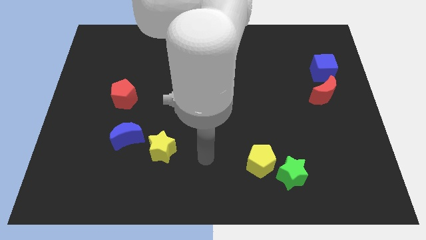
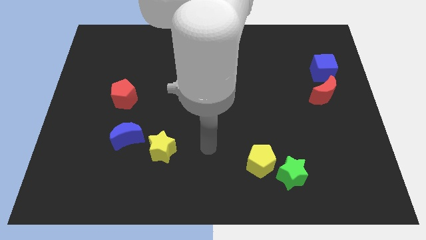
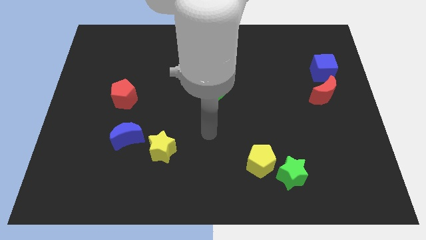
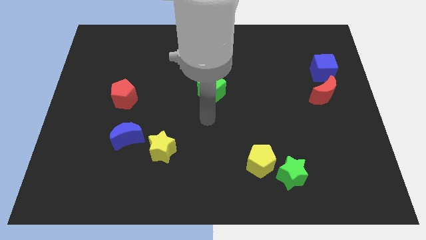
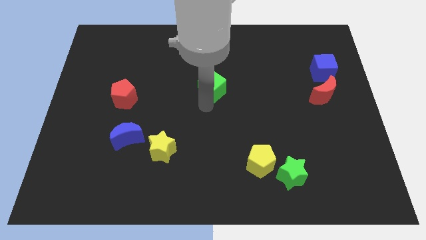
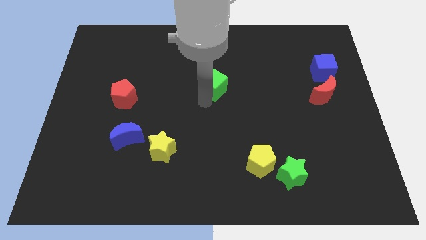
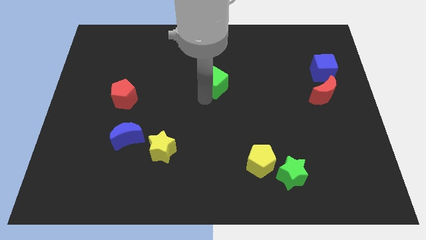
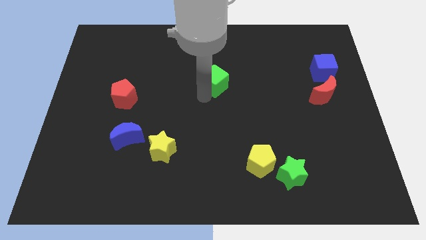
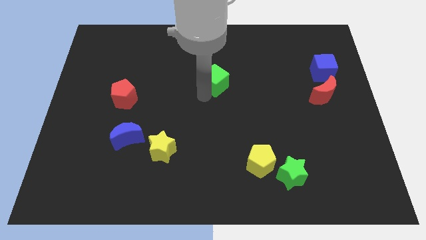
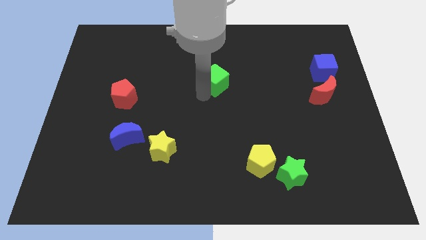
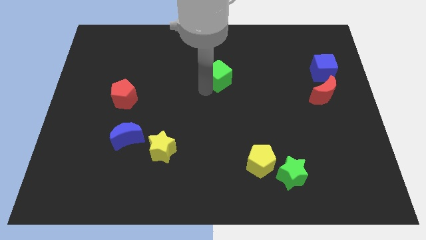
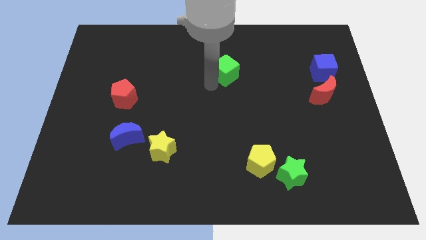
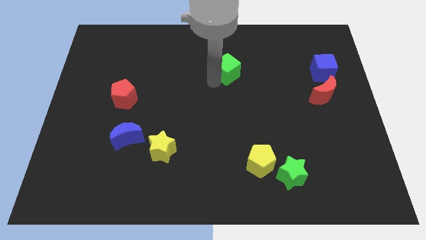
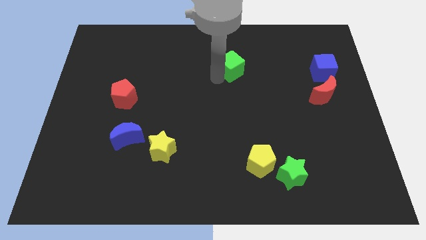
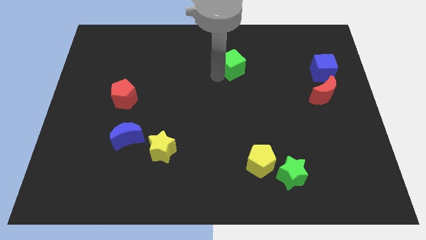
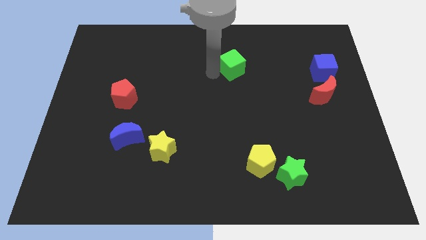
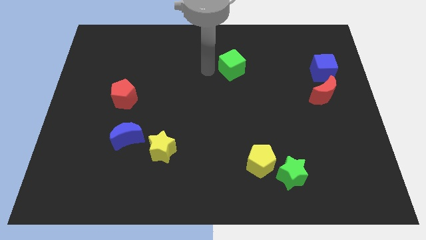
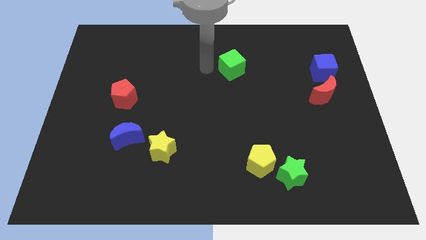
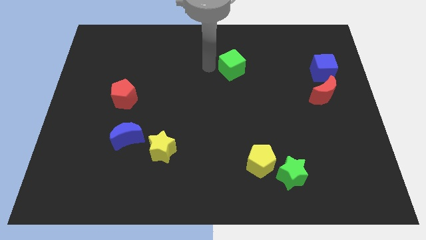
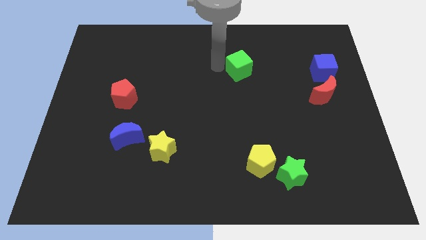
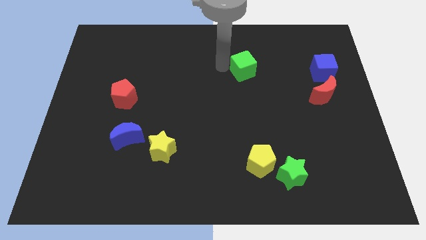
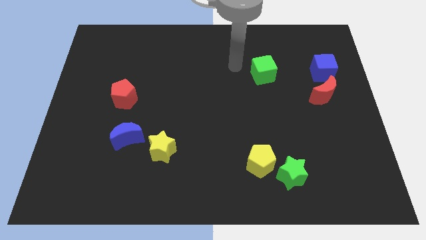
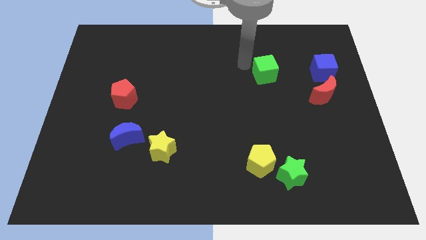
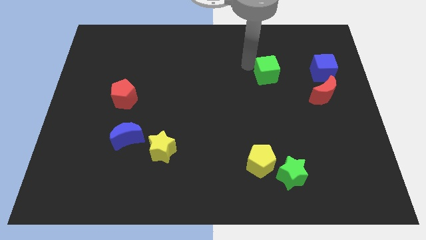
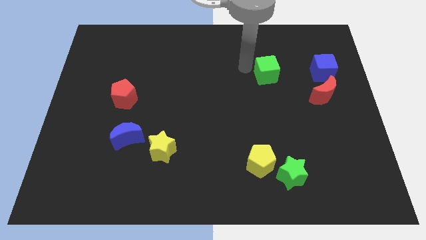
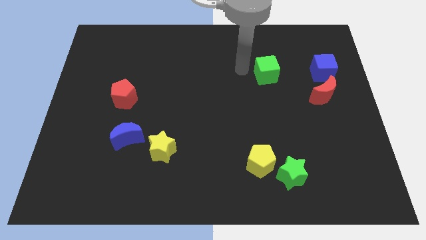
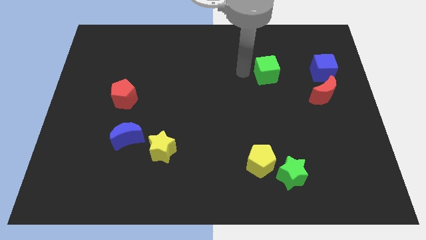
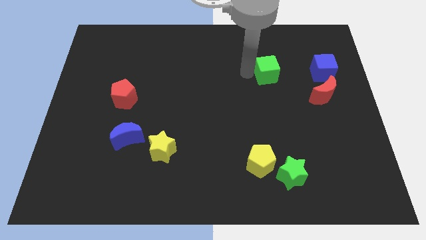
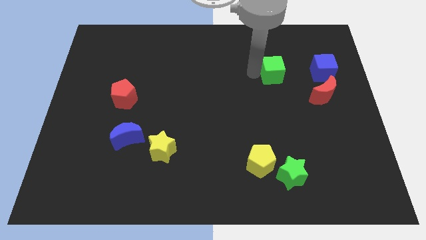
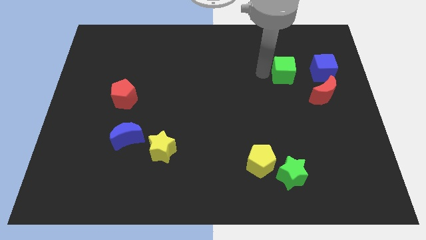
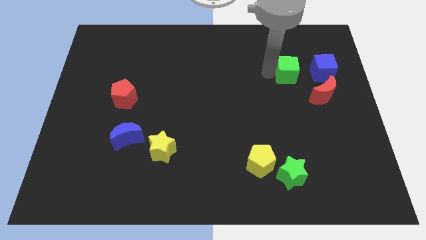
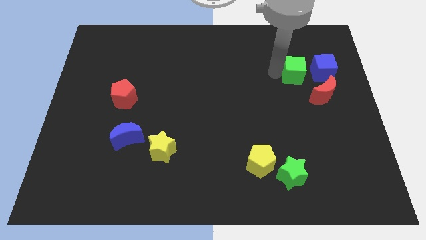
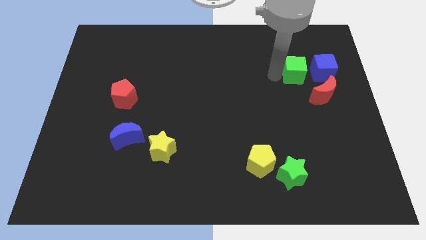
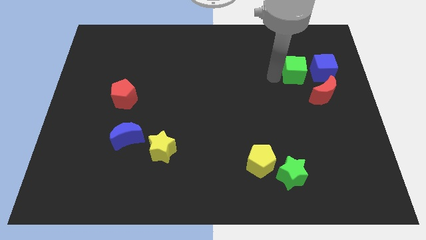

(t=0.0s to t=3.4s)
place the green cube to the left side of blue cube

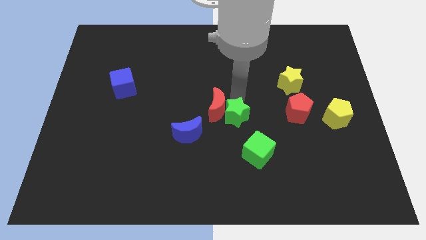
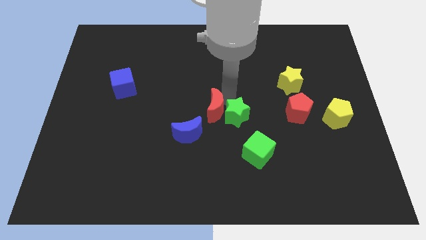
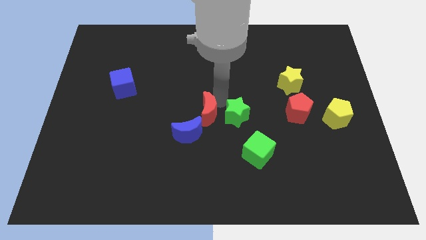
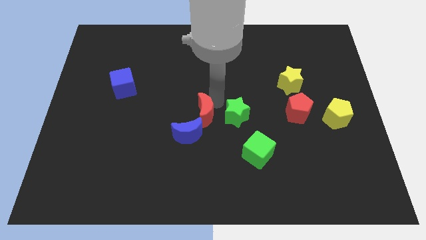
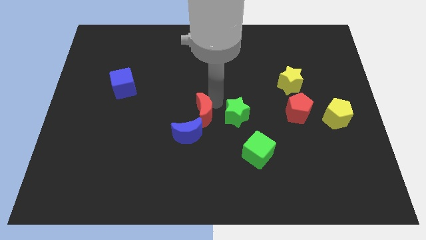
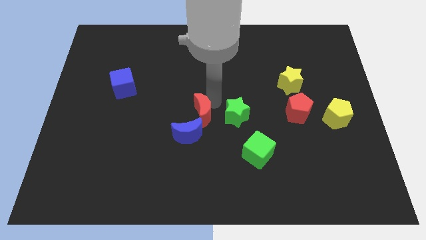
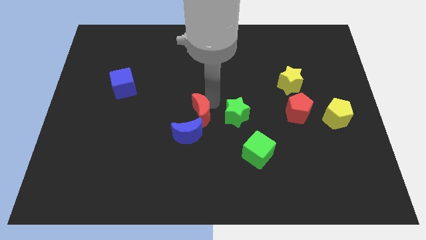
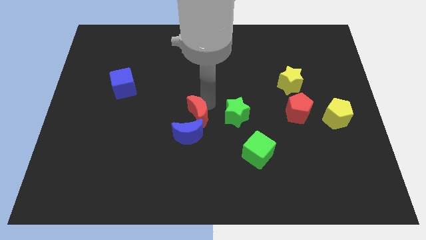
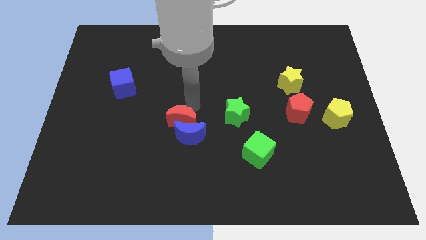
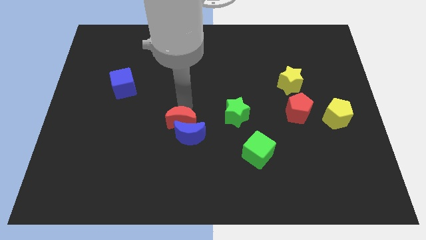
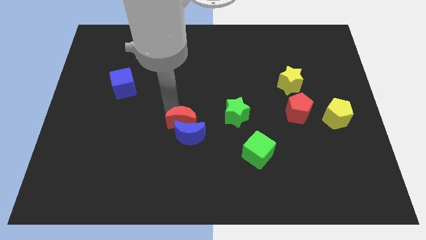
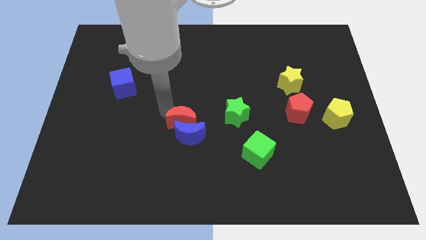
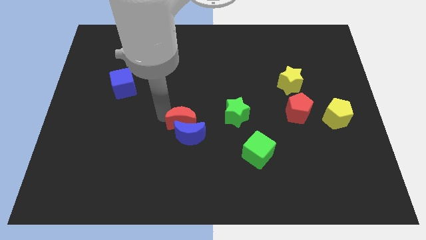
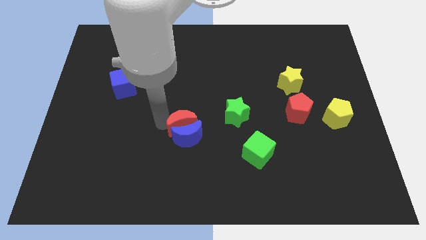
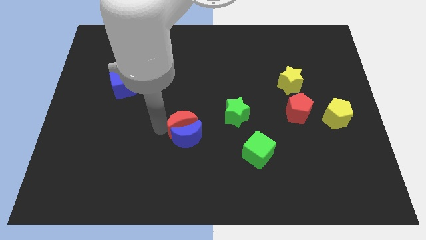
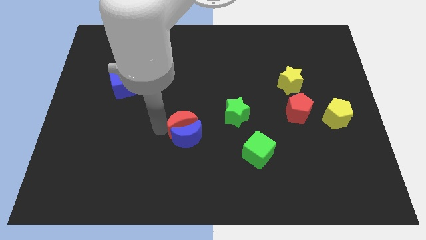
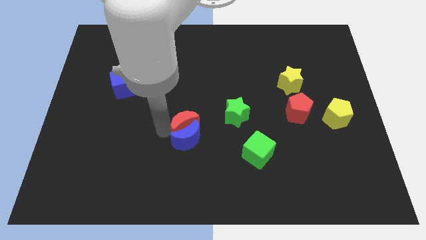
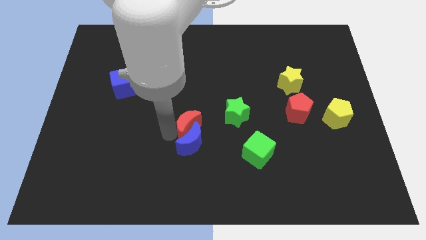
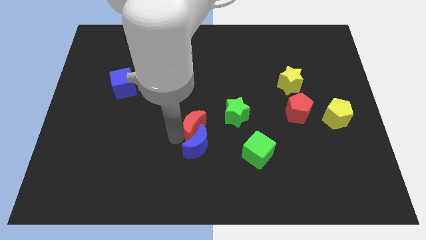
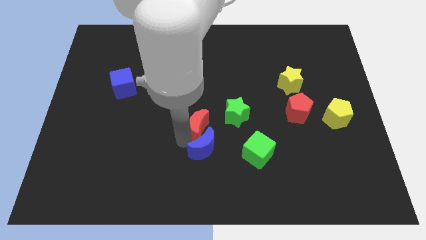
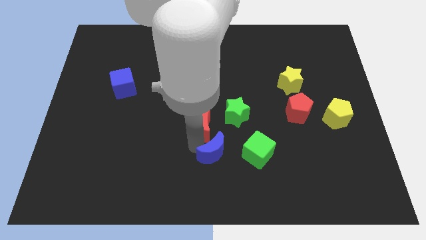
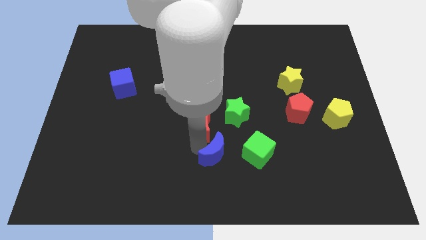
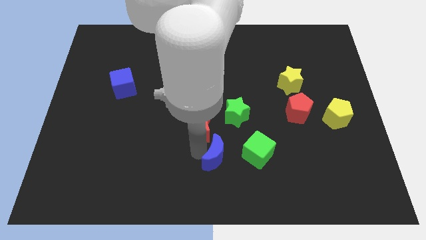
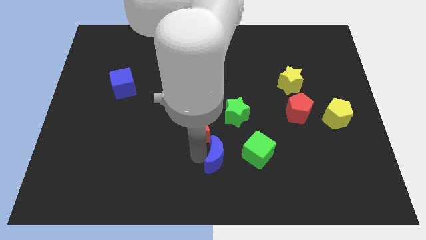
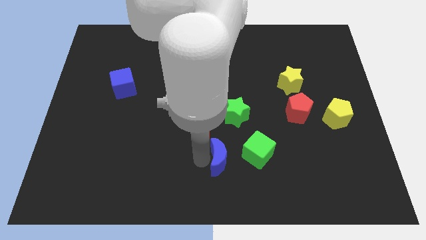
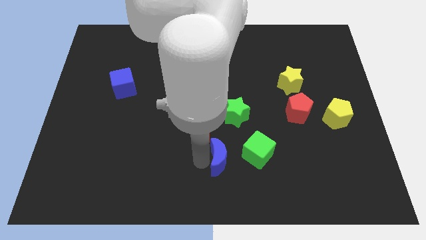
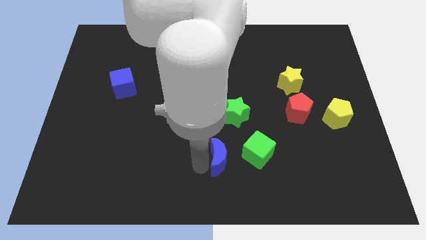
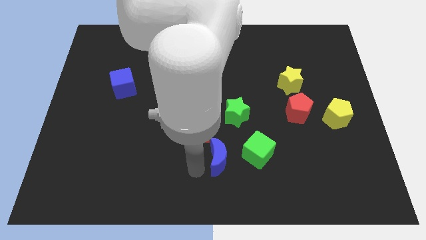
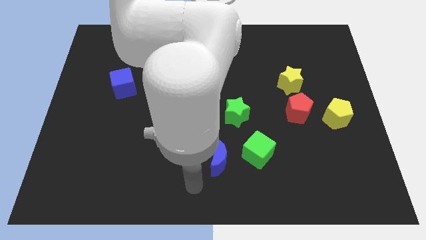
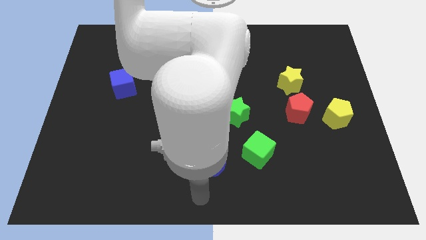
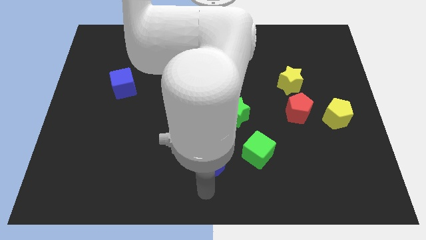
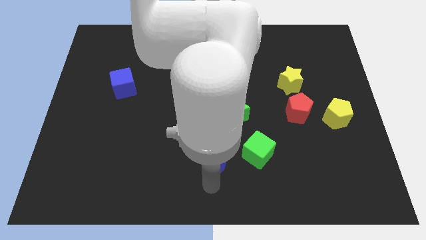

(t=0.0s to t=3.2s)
slightly push down the red moon

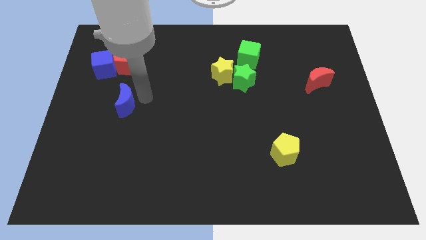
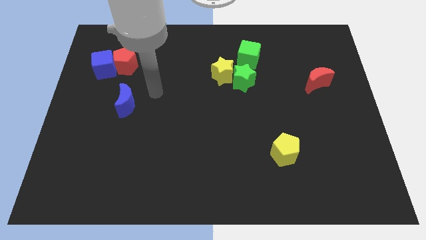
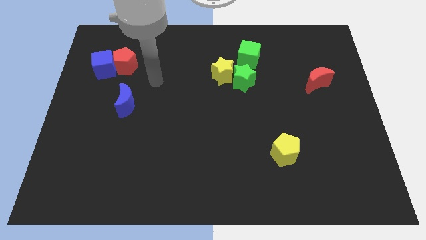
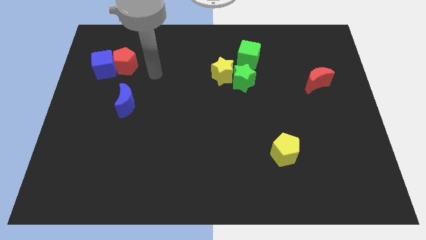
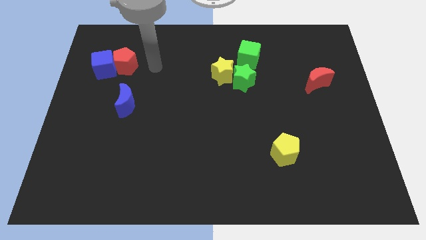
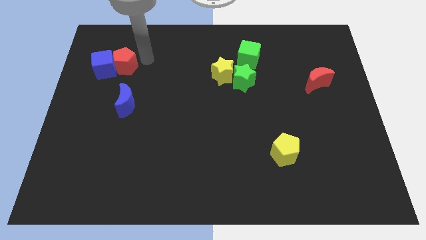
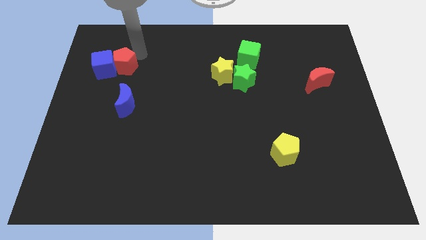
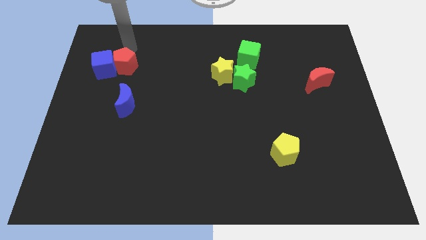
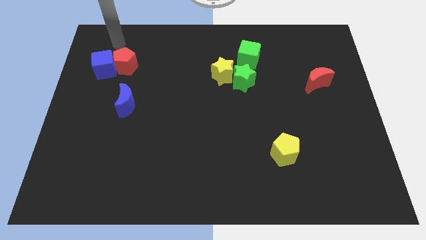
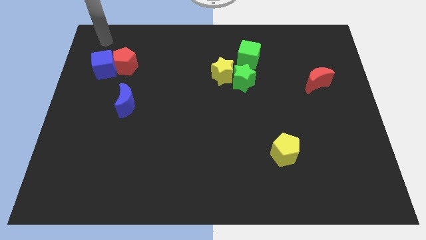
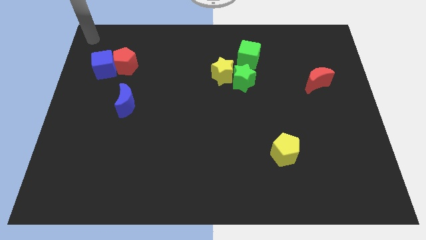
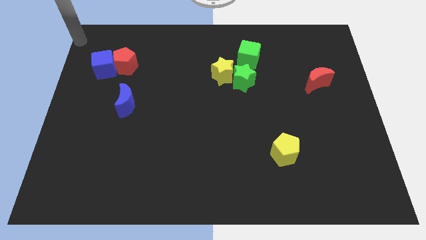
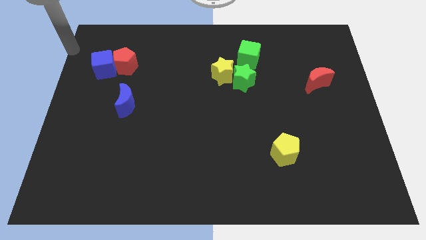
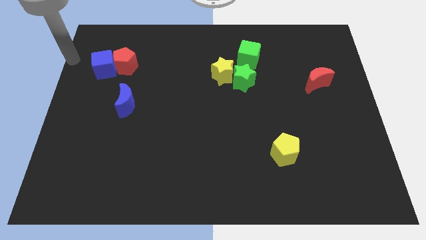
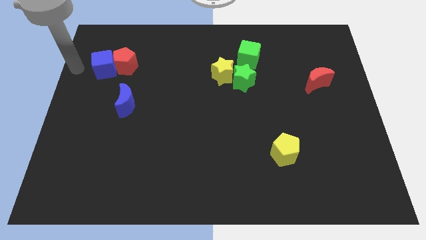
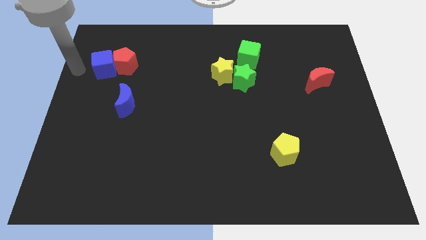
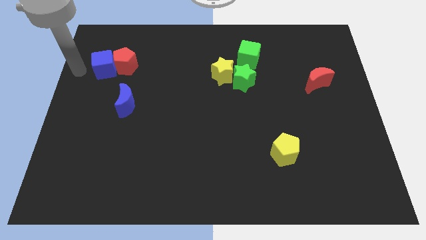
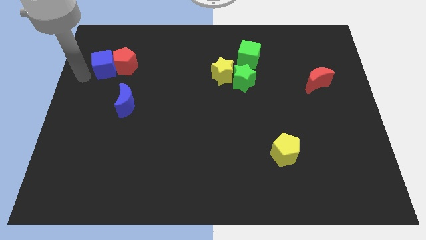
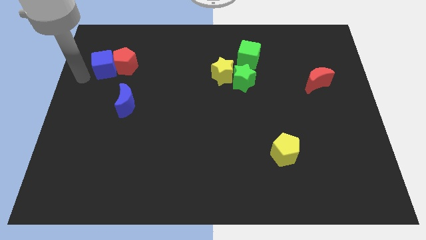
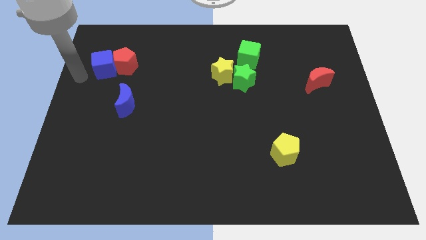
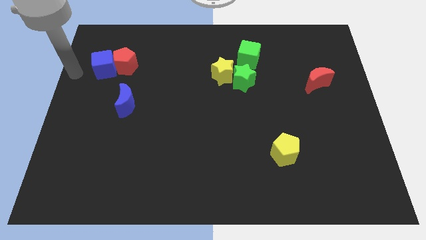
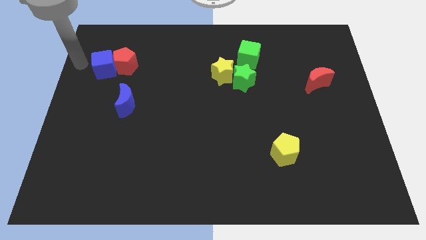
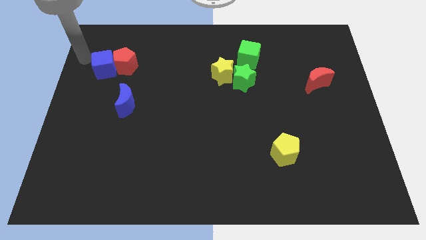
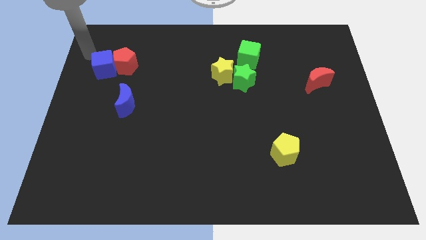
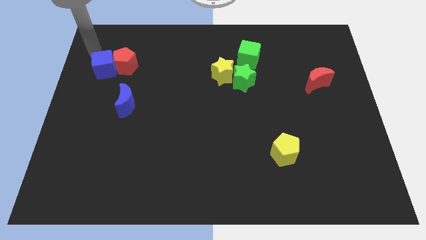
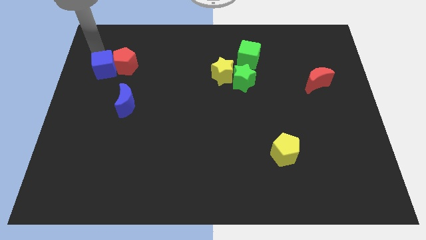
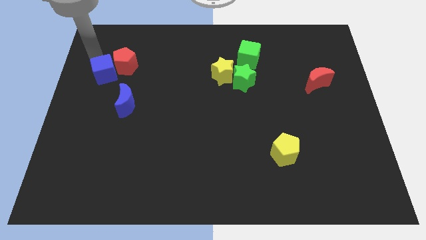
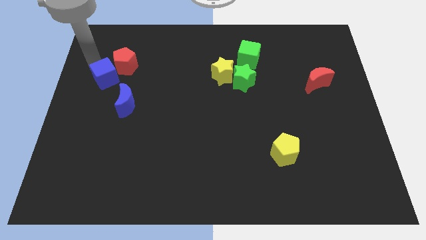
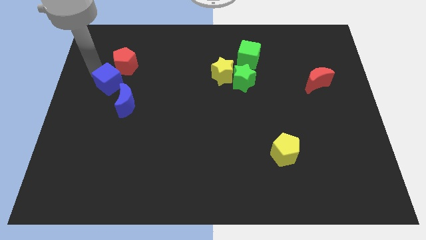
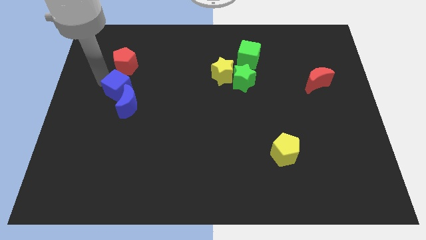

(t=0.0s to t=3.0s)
push the blue cube towards the blue crescent
